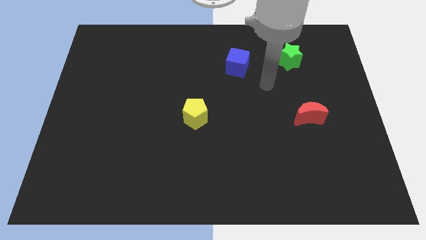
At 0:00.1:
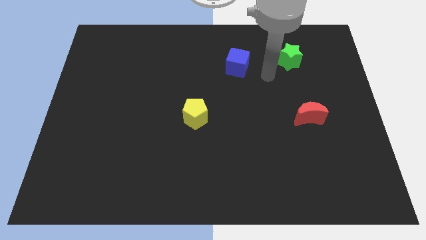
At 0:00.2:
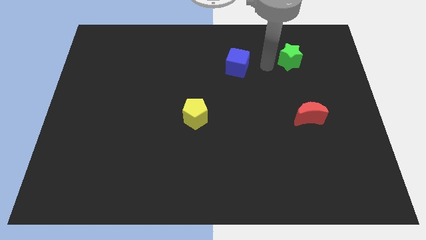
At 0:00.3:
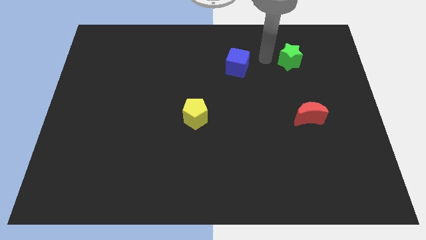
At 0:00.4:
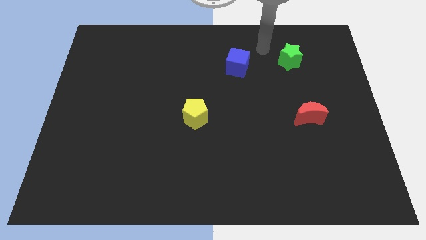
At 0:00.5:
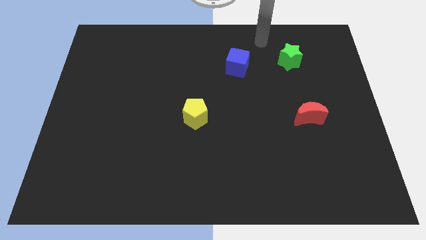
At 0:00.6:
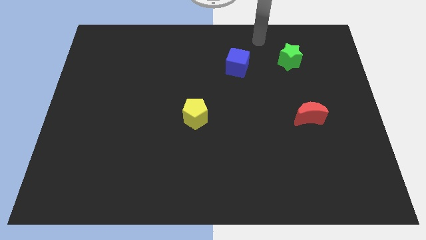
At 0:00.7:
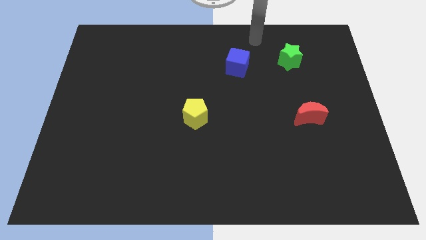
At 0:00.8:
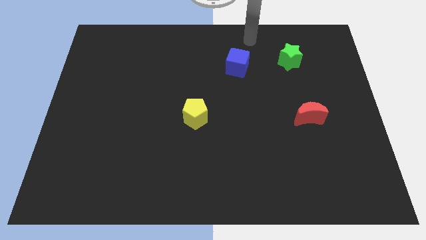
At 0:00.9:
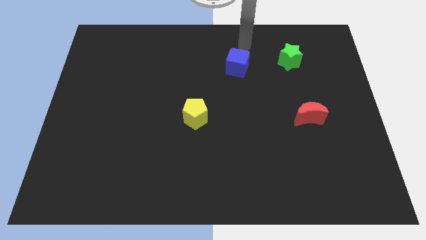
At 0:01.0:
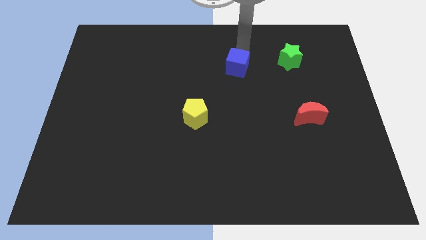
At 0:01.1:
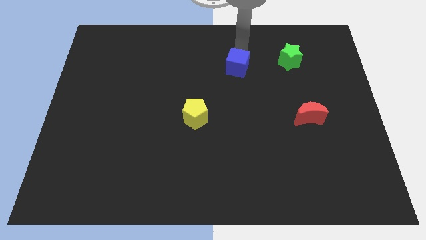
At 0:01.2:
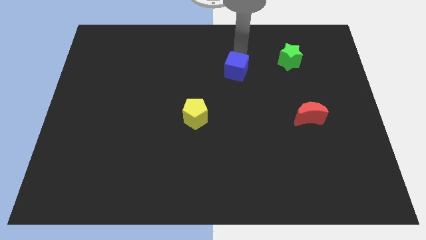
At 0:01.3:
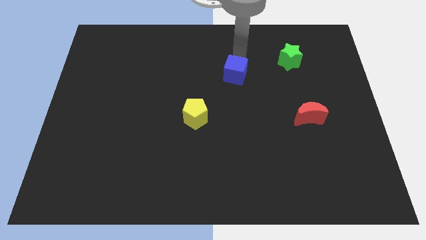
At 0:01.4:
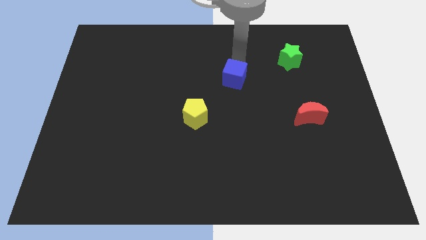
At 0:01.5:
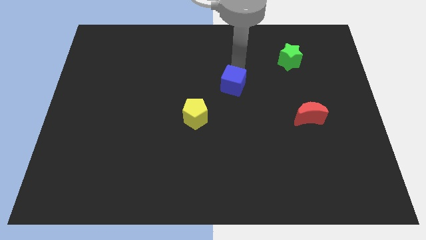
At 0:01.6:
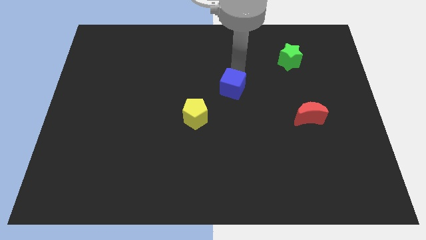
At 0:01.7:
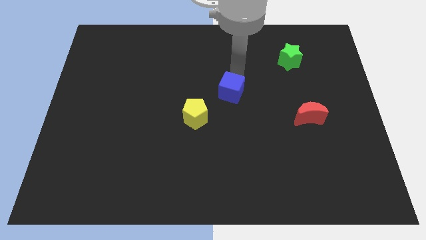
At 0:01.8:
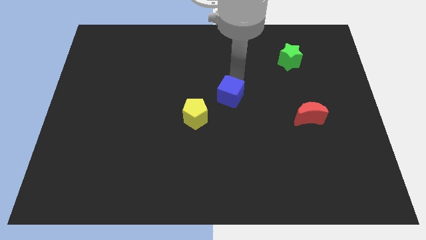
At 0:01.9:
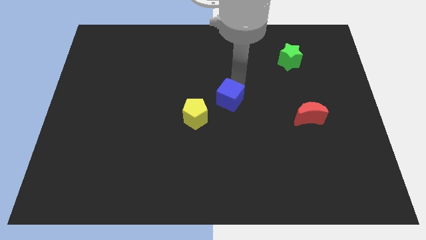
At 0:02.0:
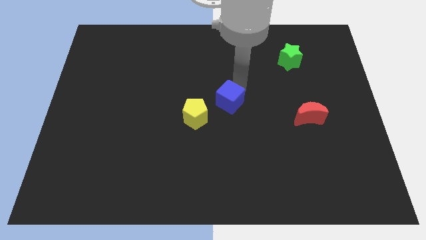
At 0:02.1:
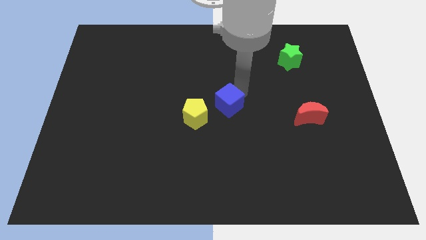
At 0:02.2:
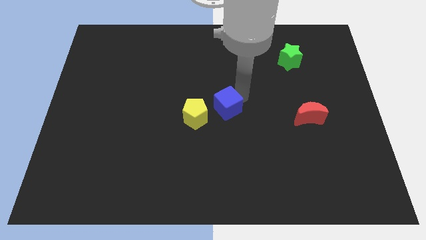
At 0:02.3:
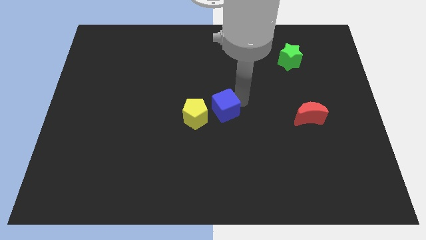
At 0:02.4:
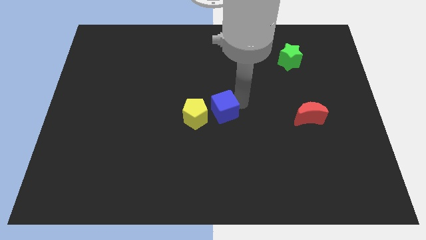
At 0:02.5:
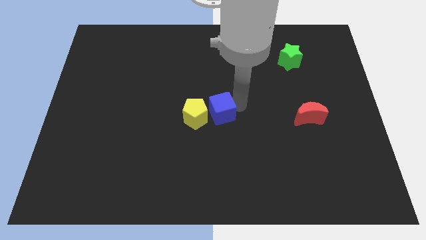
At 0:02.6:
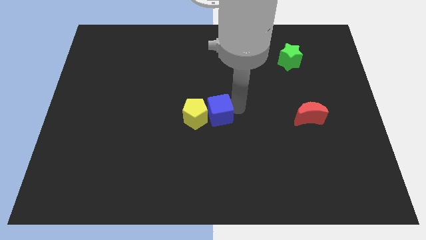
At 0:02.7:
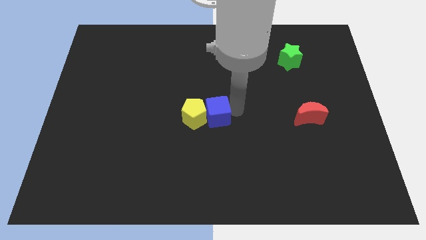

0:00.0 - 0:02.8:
push the cube close to the pentagon

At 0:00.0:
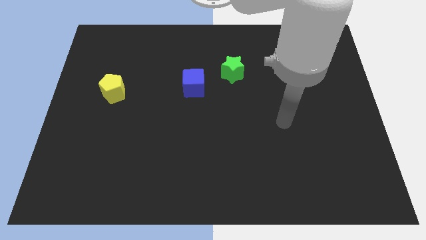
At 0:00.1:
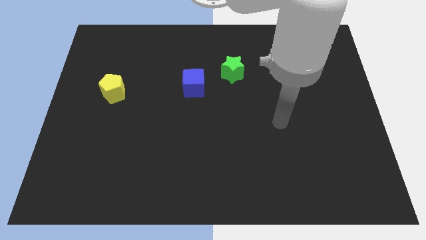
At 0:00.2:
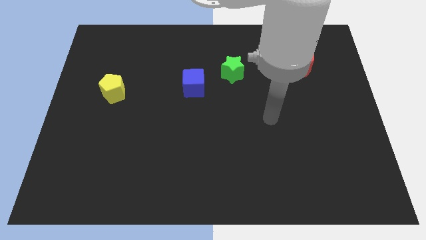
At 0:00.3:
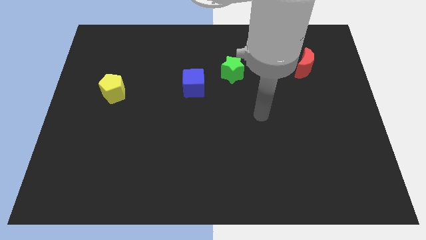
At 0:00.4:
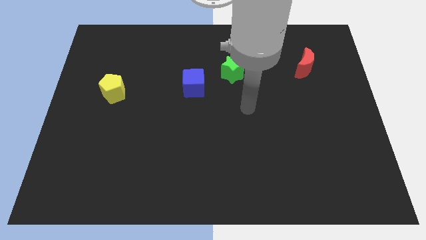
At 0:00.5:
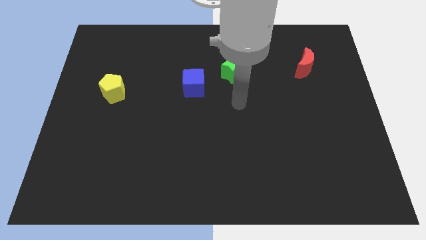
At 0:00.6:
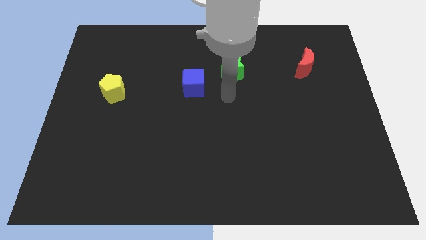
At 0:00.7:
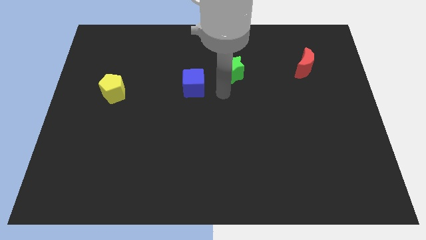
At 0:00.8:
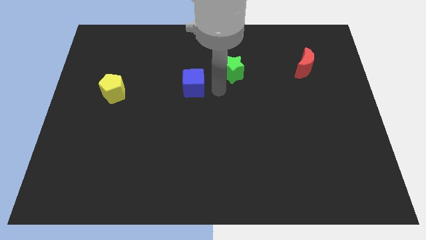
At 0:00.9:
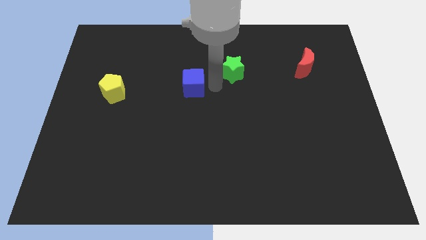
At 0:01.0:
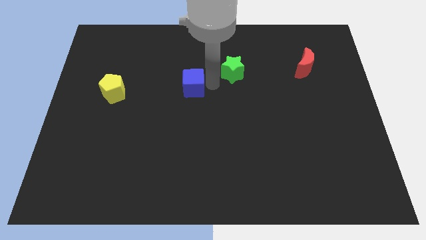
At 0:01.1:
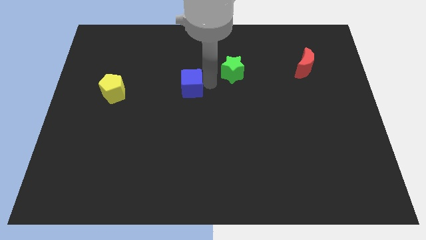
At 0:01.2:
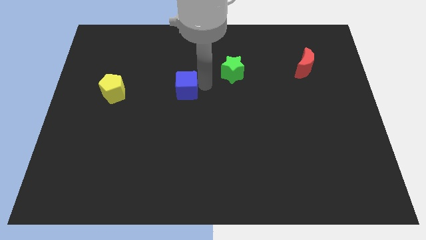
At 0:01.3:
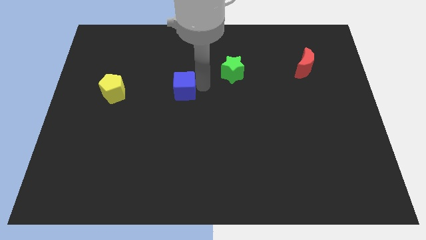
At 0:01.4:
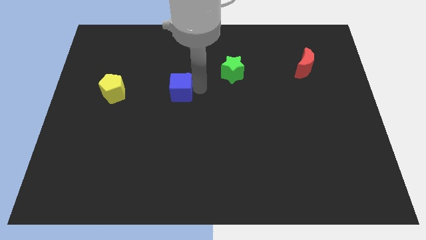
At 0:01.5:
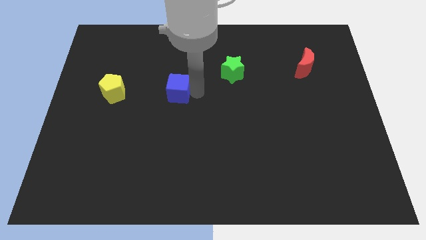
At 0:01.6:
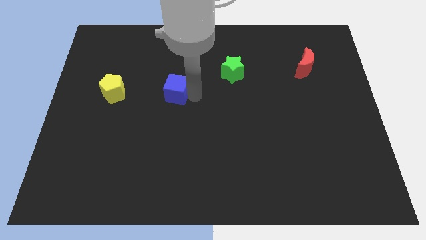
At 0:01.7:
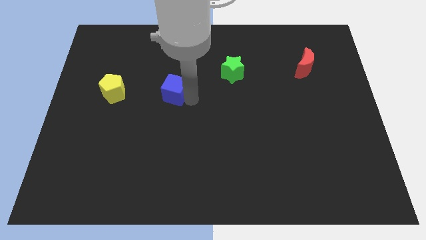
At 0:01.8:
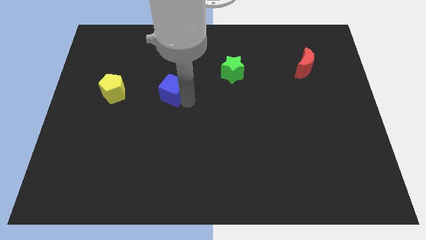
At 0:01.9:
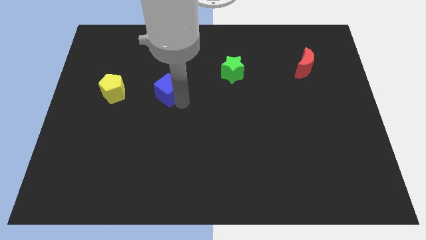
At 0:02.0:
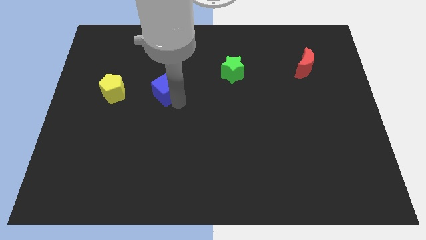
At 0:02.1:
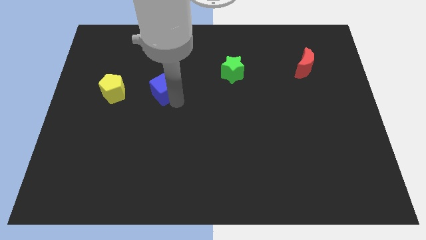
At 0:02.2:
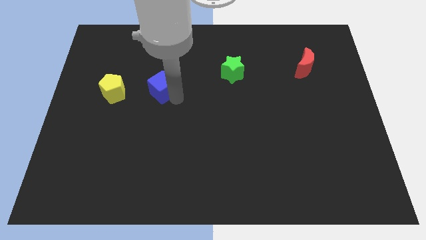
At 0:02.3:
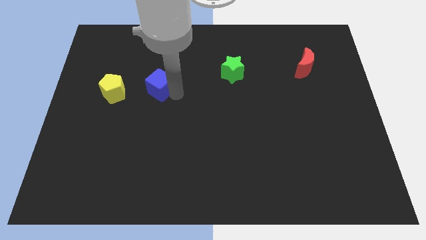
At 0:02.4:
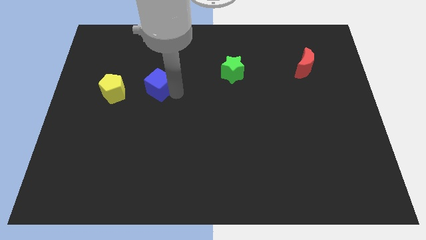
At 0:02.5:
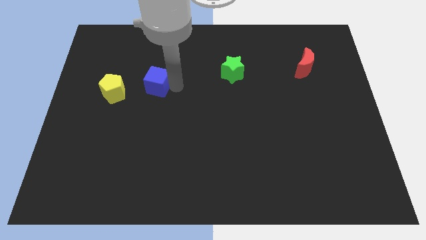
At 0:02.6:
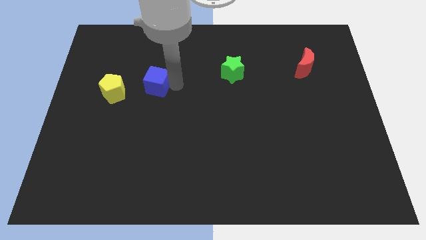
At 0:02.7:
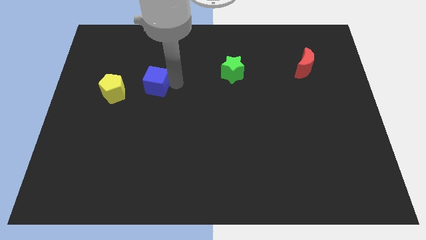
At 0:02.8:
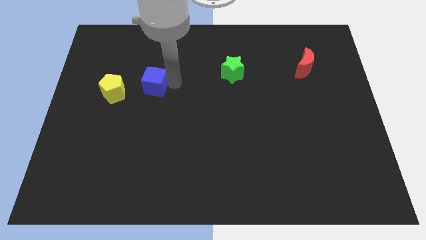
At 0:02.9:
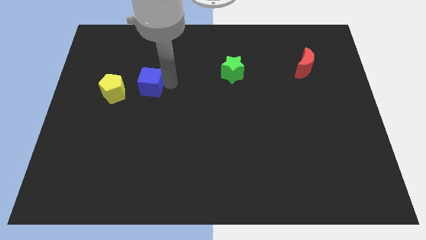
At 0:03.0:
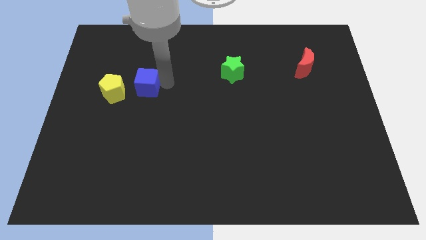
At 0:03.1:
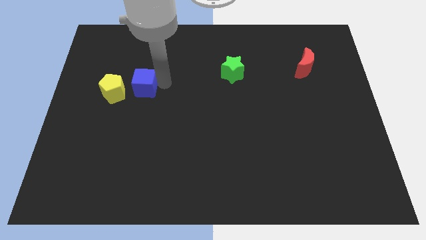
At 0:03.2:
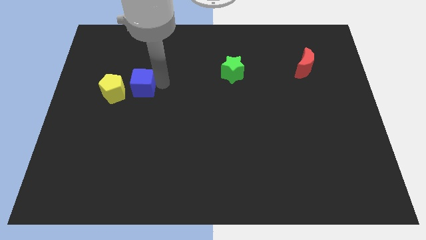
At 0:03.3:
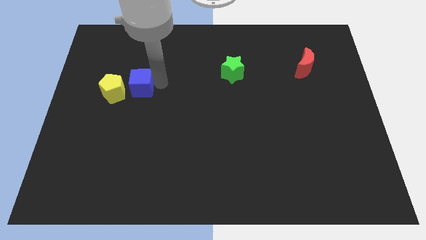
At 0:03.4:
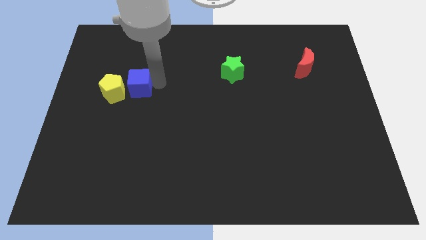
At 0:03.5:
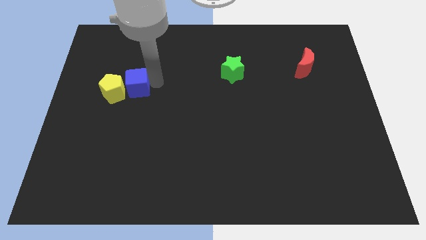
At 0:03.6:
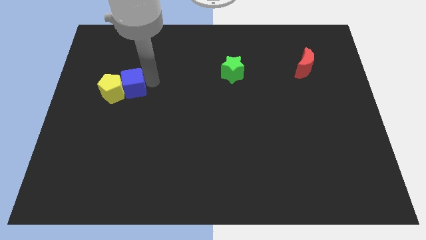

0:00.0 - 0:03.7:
slide the cube next to the yellow pentagon

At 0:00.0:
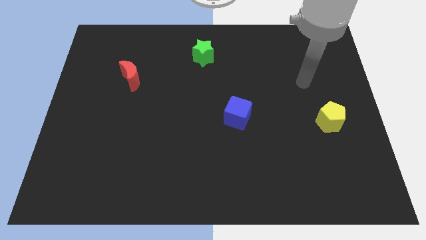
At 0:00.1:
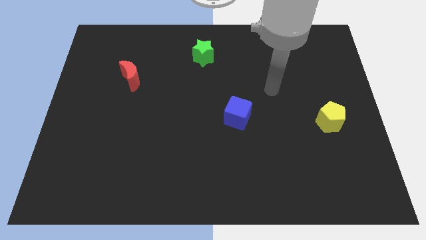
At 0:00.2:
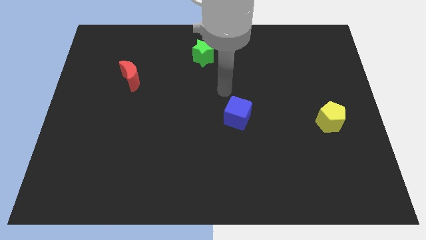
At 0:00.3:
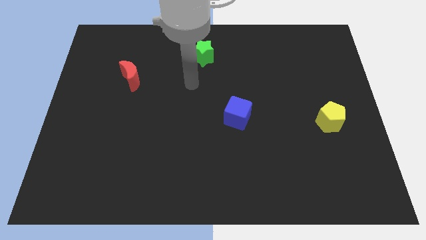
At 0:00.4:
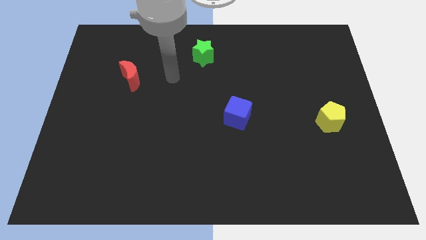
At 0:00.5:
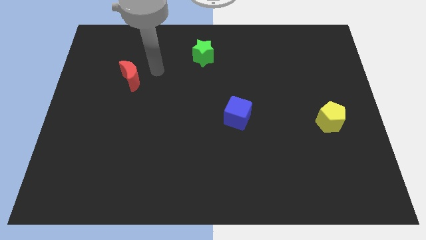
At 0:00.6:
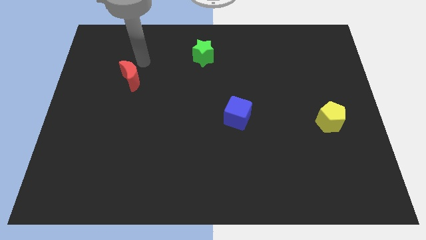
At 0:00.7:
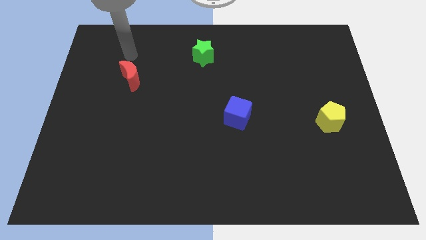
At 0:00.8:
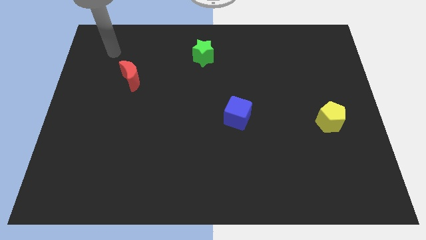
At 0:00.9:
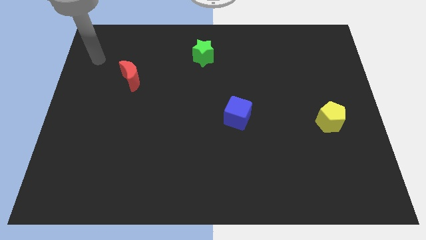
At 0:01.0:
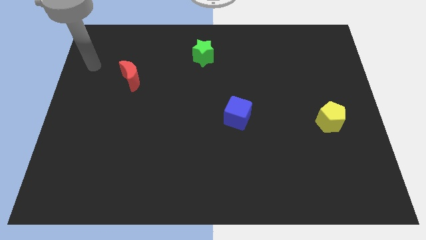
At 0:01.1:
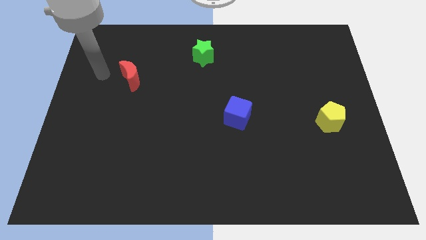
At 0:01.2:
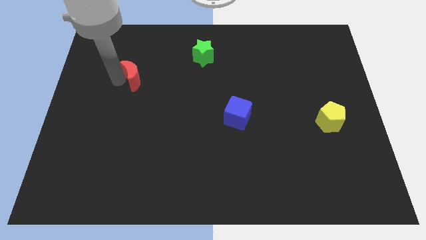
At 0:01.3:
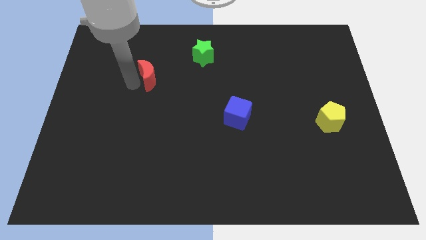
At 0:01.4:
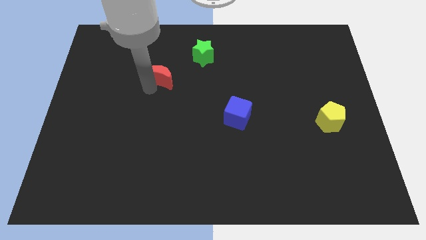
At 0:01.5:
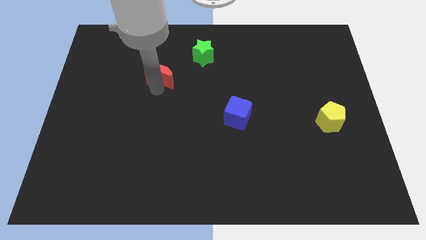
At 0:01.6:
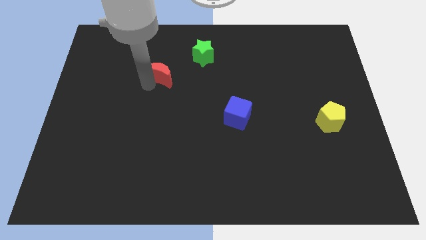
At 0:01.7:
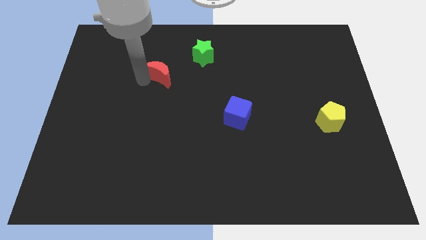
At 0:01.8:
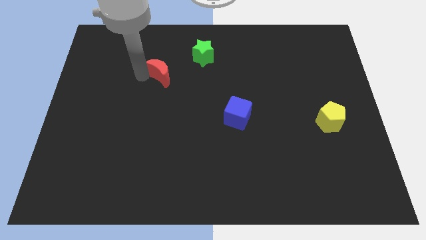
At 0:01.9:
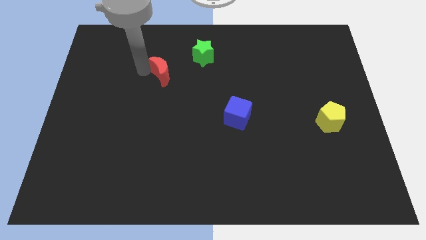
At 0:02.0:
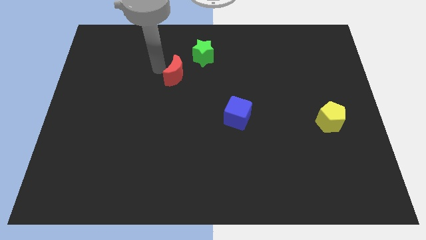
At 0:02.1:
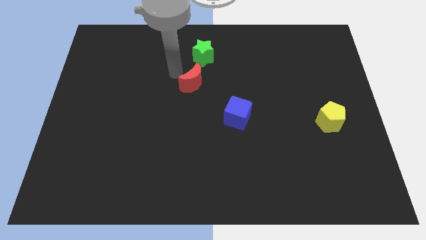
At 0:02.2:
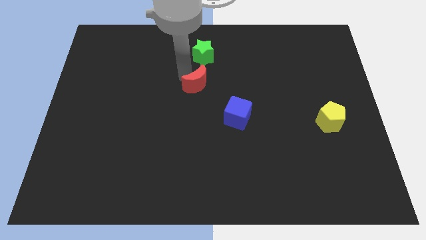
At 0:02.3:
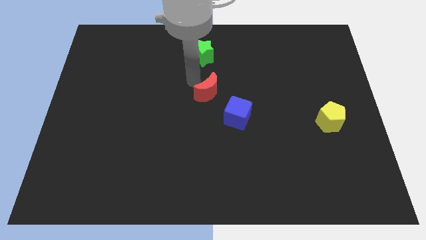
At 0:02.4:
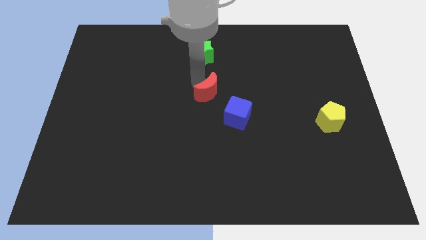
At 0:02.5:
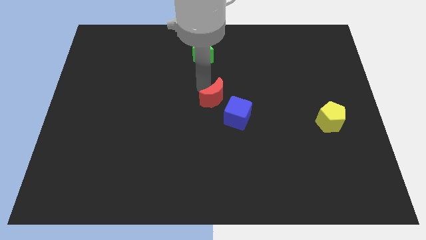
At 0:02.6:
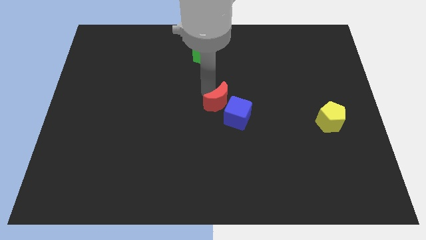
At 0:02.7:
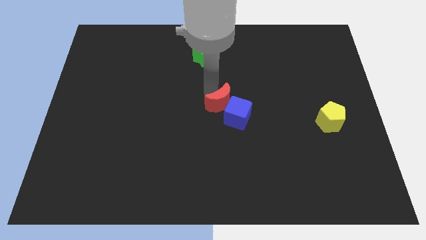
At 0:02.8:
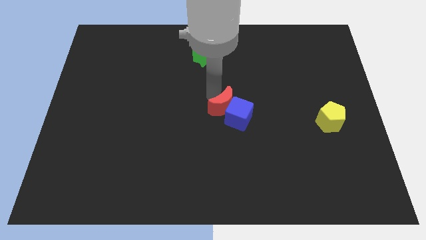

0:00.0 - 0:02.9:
put the moon to the blue cube
